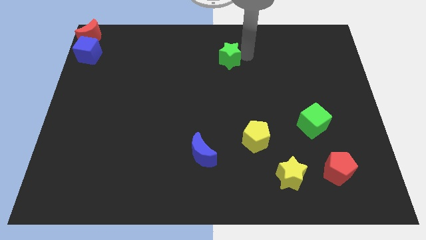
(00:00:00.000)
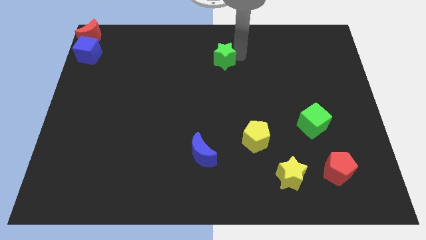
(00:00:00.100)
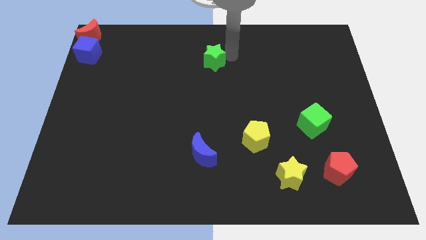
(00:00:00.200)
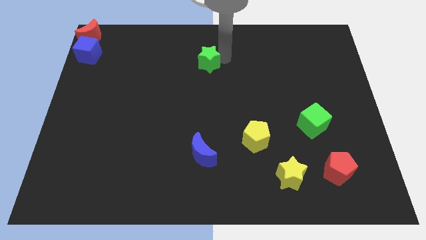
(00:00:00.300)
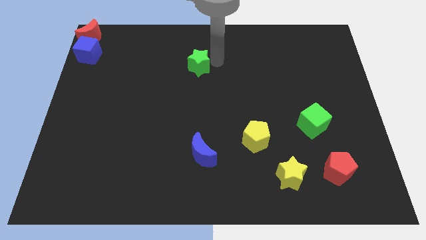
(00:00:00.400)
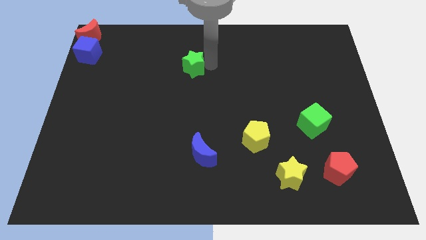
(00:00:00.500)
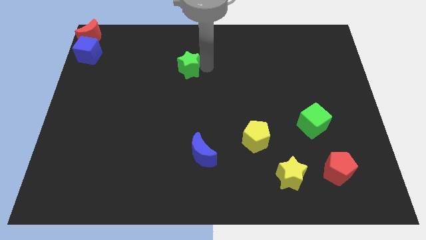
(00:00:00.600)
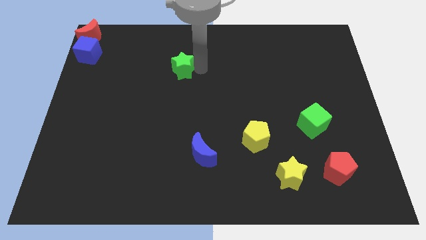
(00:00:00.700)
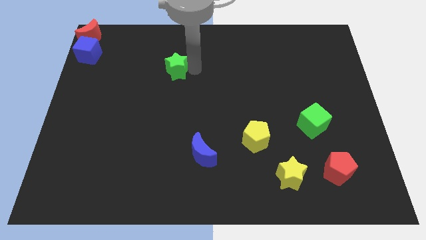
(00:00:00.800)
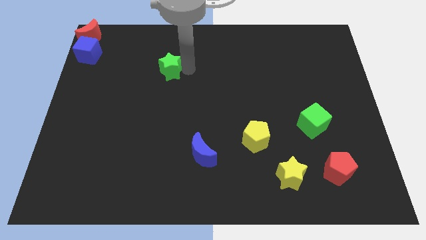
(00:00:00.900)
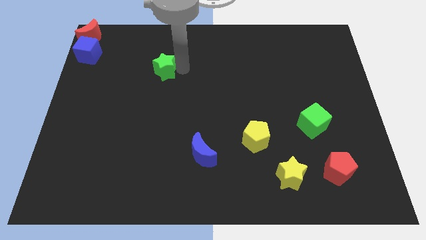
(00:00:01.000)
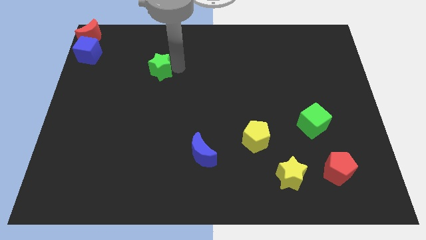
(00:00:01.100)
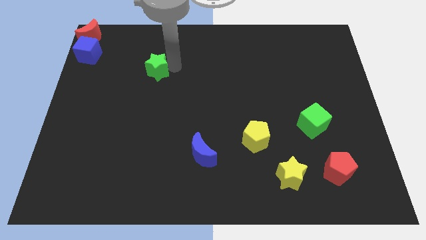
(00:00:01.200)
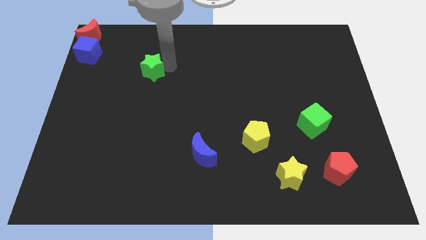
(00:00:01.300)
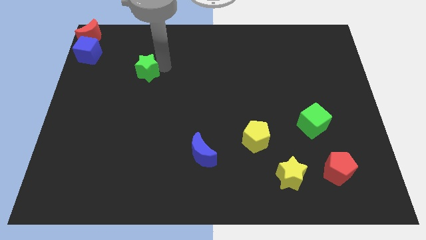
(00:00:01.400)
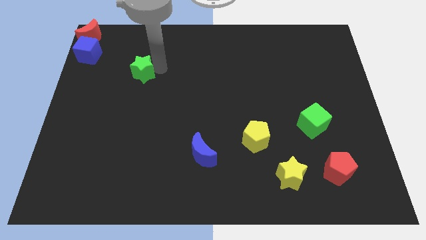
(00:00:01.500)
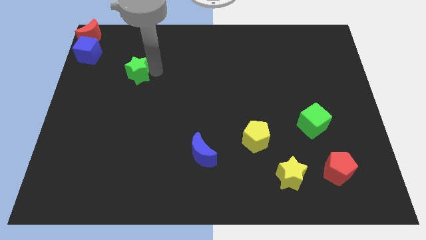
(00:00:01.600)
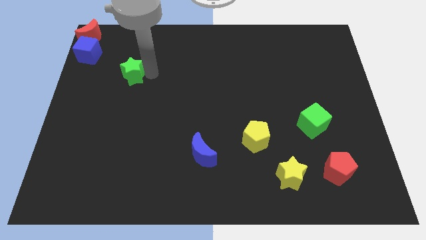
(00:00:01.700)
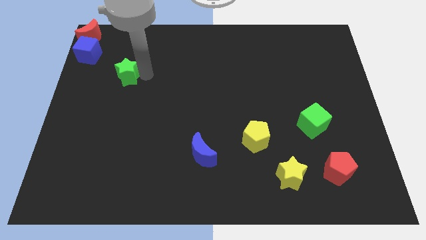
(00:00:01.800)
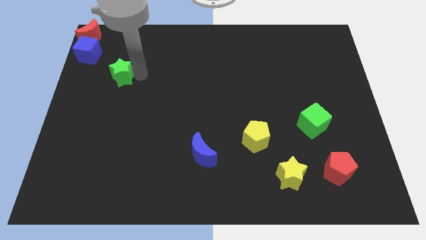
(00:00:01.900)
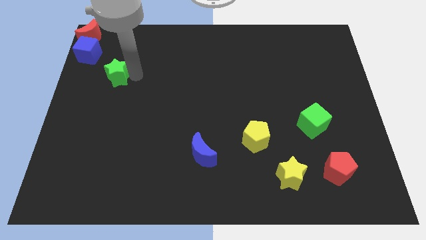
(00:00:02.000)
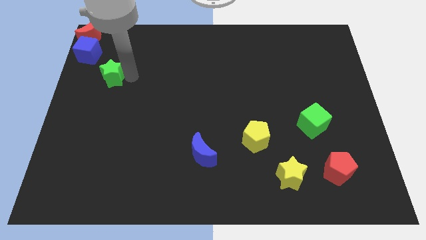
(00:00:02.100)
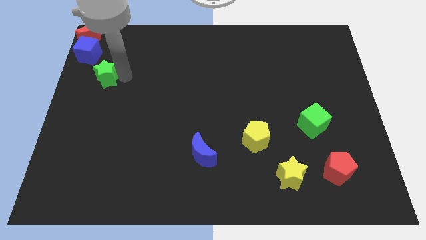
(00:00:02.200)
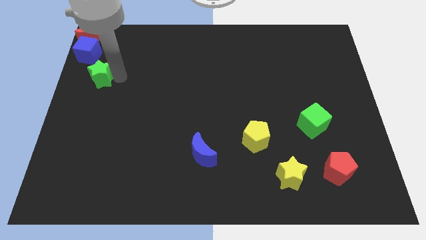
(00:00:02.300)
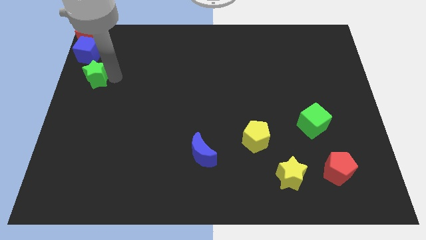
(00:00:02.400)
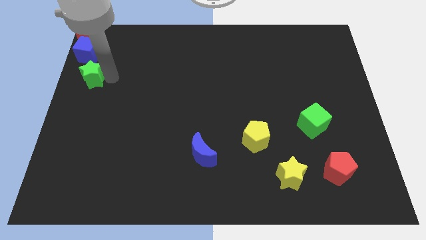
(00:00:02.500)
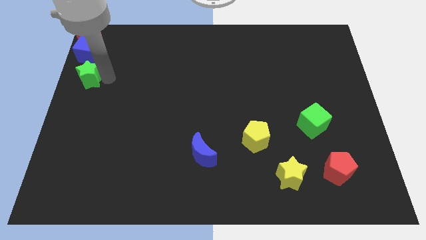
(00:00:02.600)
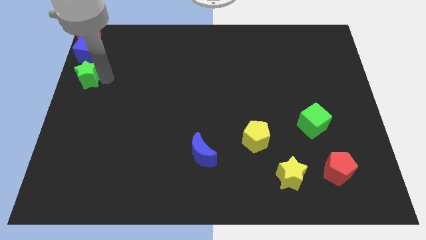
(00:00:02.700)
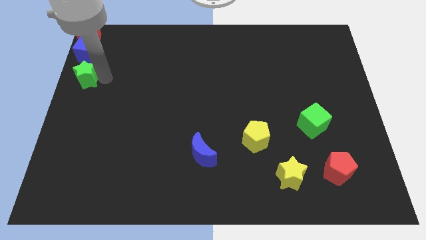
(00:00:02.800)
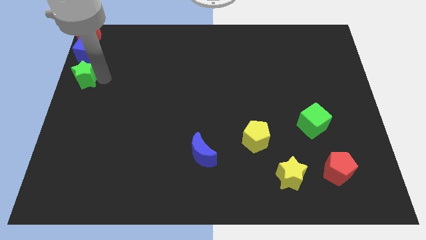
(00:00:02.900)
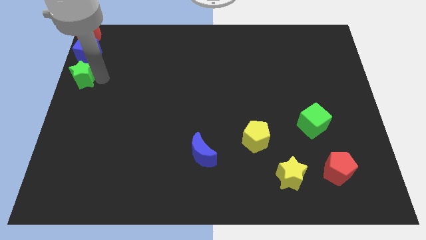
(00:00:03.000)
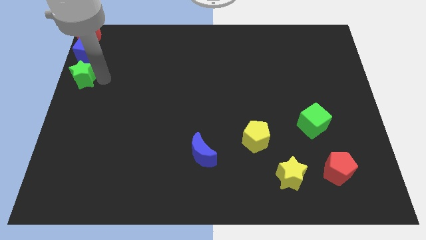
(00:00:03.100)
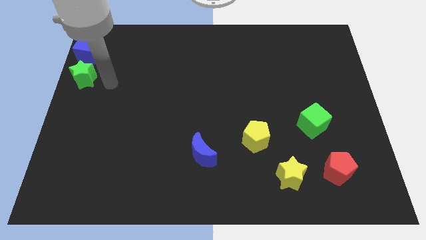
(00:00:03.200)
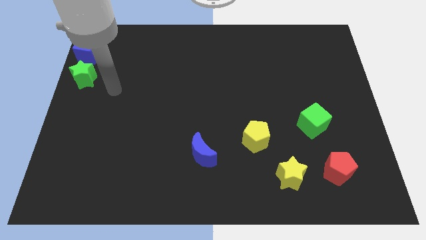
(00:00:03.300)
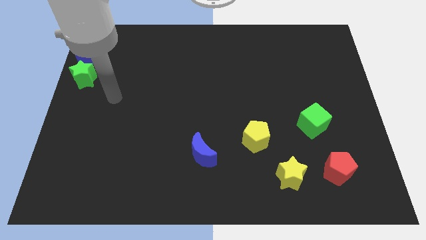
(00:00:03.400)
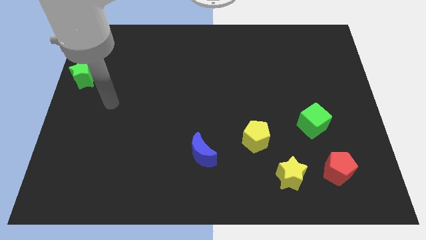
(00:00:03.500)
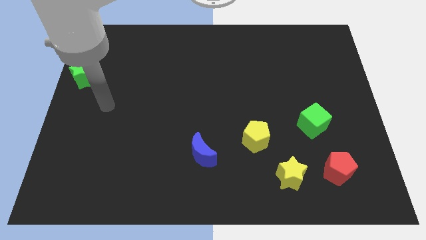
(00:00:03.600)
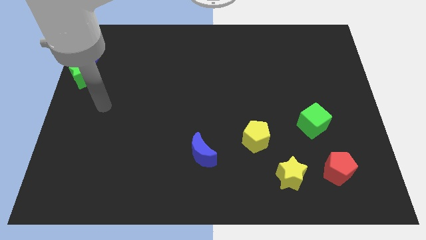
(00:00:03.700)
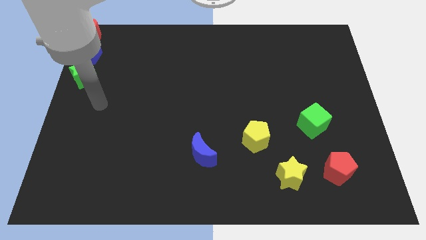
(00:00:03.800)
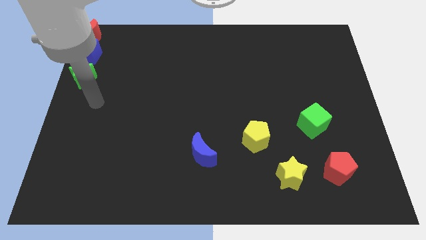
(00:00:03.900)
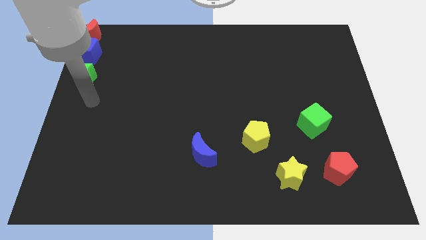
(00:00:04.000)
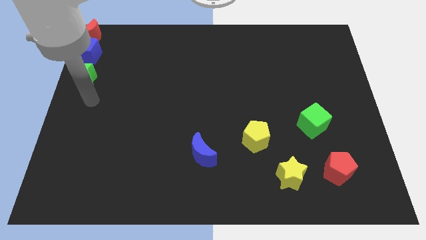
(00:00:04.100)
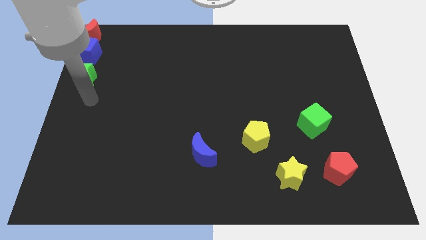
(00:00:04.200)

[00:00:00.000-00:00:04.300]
place the green star below the blue cube

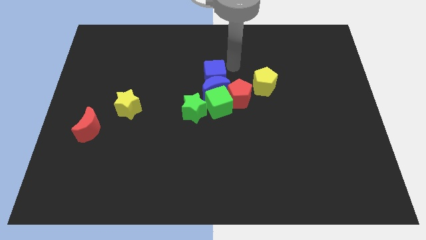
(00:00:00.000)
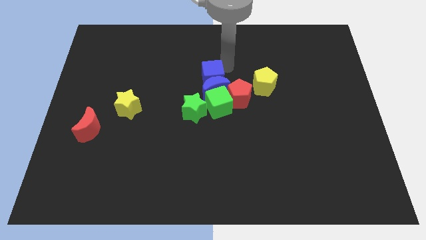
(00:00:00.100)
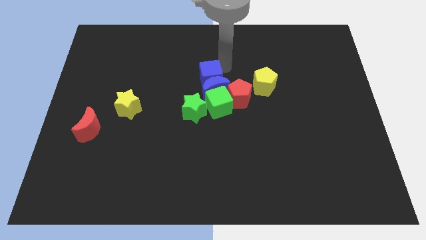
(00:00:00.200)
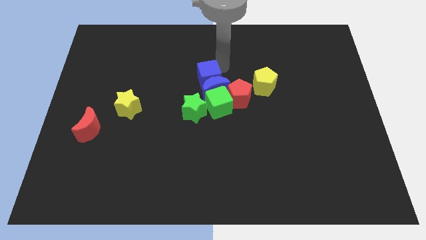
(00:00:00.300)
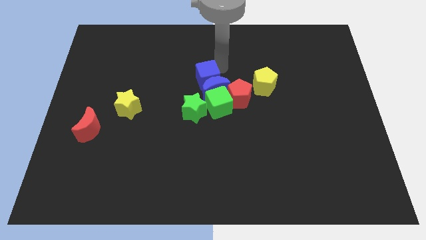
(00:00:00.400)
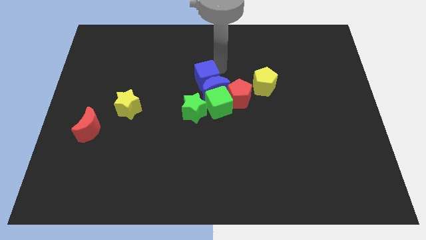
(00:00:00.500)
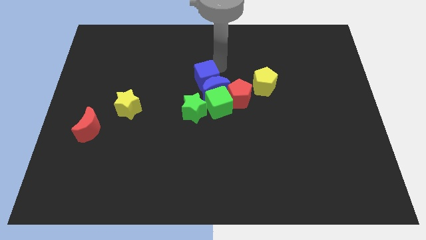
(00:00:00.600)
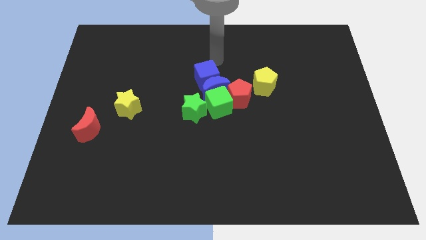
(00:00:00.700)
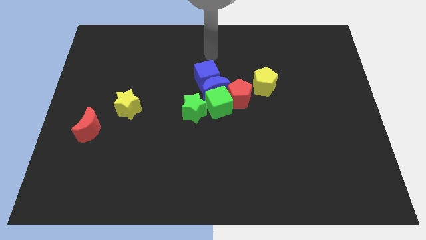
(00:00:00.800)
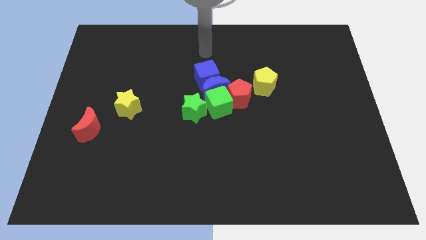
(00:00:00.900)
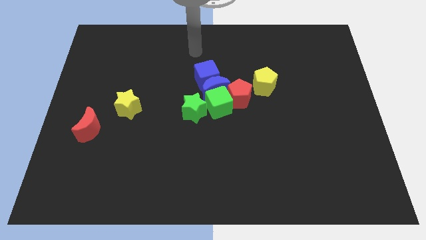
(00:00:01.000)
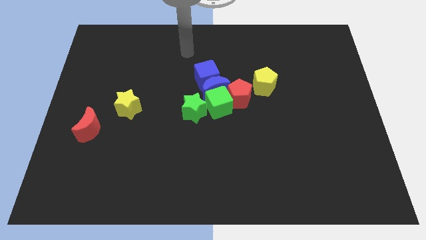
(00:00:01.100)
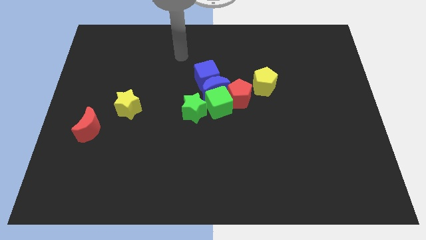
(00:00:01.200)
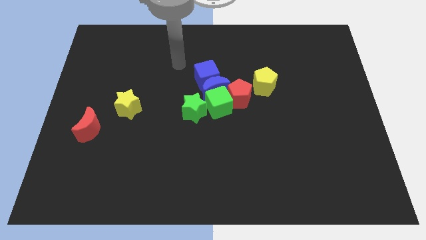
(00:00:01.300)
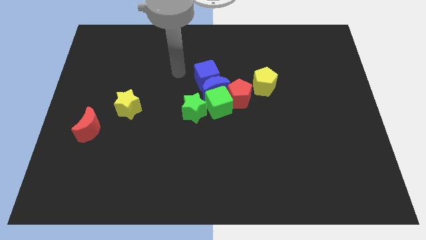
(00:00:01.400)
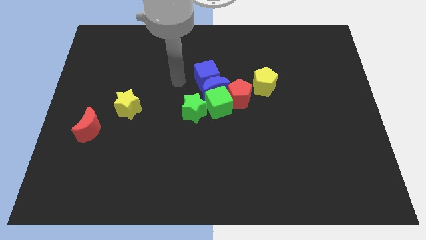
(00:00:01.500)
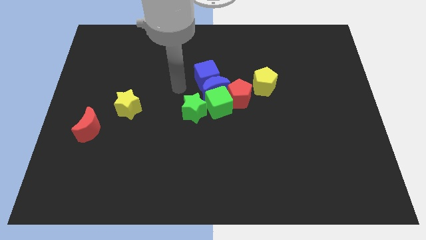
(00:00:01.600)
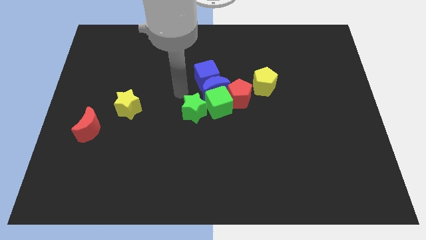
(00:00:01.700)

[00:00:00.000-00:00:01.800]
push the blue cube towards the blue crescent

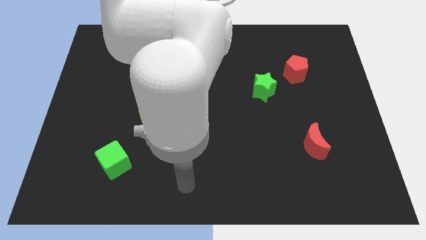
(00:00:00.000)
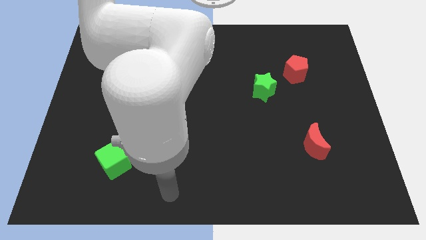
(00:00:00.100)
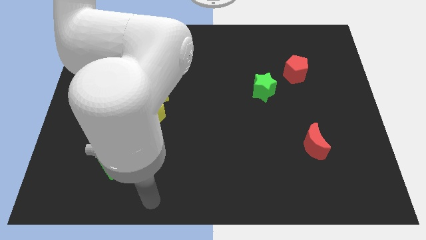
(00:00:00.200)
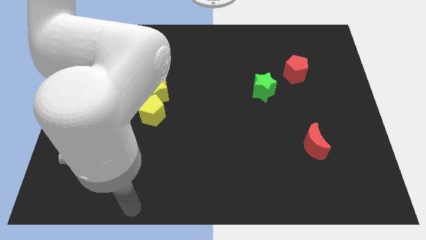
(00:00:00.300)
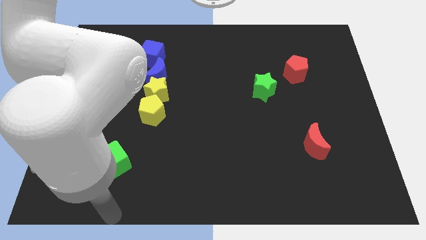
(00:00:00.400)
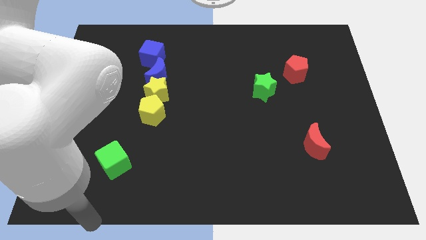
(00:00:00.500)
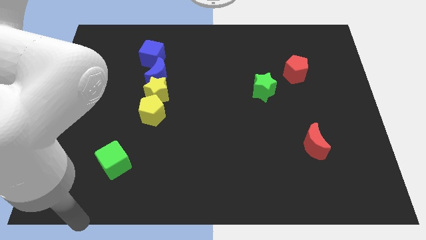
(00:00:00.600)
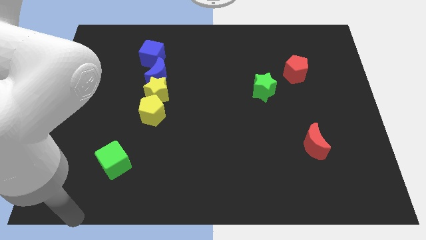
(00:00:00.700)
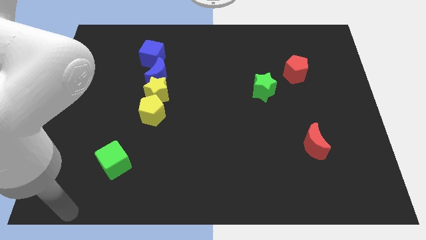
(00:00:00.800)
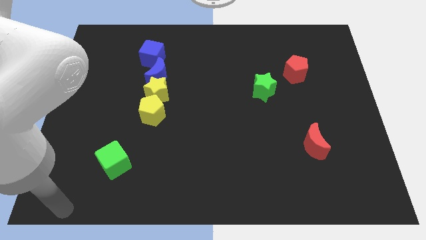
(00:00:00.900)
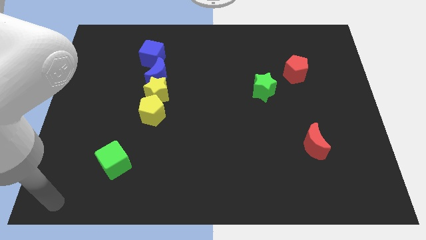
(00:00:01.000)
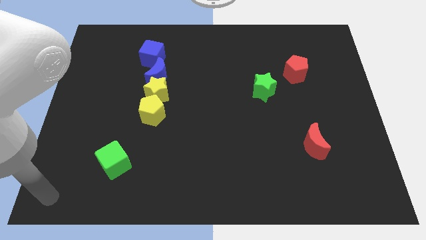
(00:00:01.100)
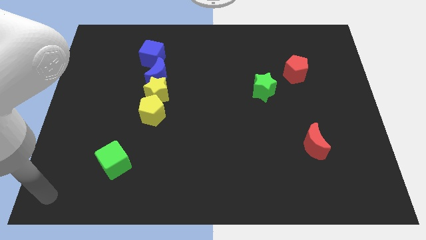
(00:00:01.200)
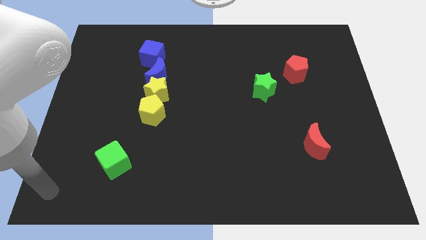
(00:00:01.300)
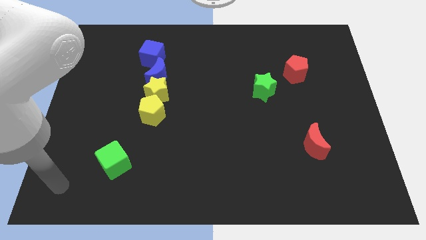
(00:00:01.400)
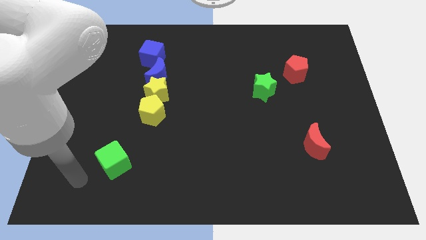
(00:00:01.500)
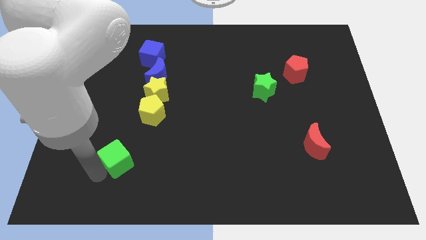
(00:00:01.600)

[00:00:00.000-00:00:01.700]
place your arm to the left side of the green cube

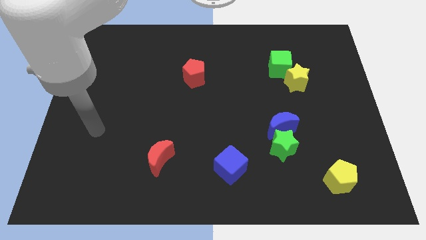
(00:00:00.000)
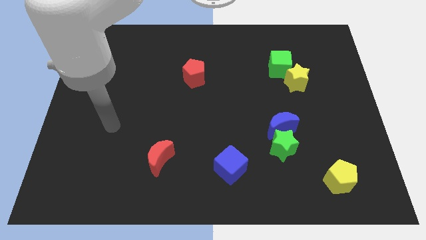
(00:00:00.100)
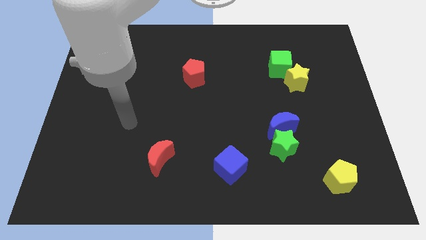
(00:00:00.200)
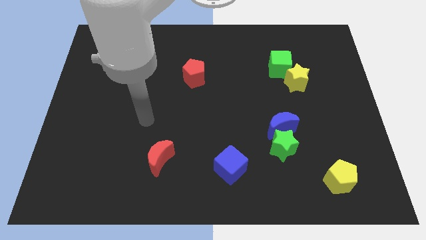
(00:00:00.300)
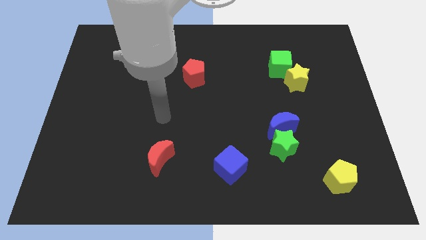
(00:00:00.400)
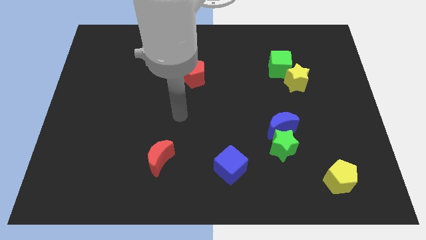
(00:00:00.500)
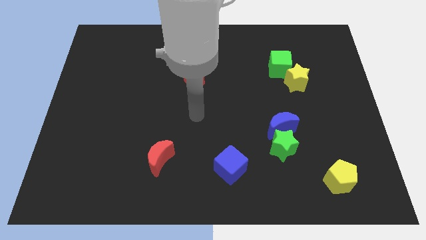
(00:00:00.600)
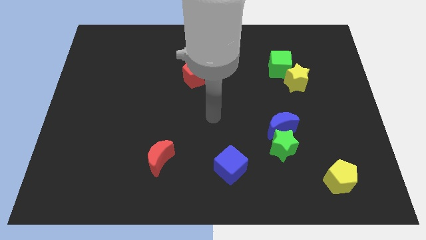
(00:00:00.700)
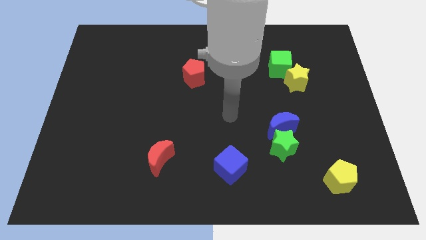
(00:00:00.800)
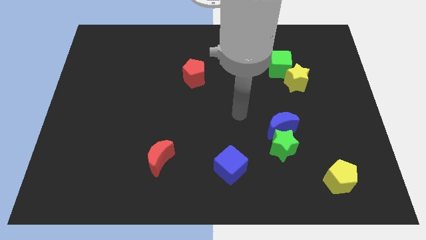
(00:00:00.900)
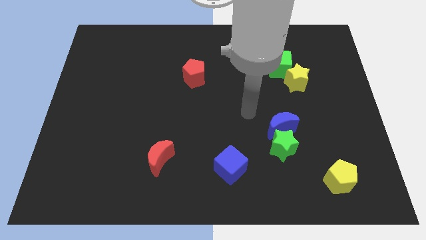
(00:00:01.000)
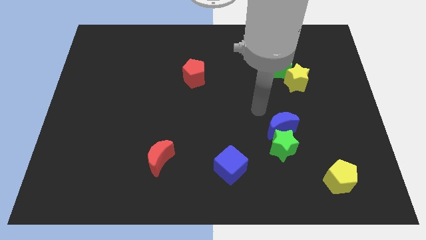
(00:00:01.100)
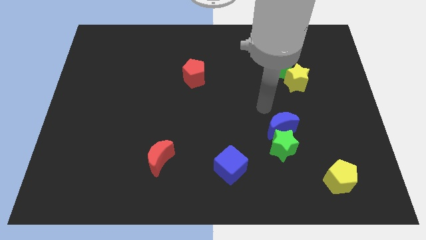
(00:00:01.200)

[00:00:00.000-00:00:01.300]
move your hand close to blue crescent
